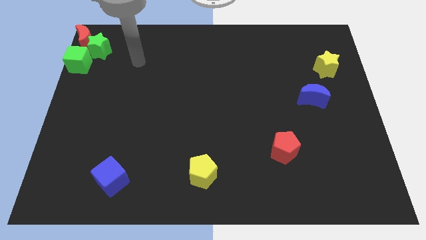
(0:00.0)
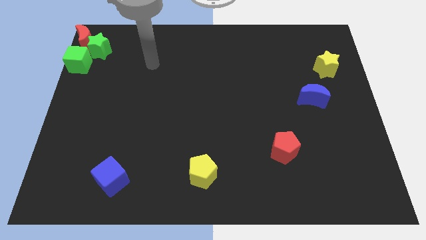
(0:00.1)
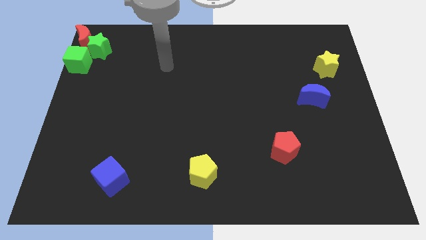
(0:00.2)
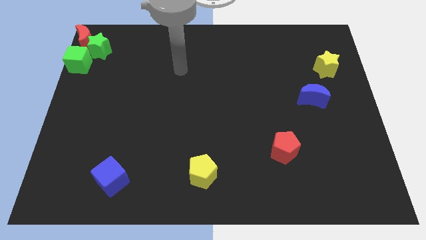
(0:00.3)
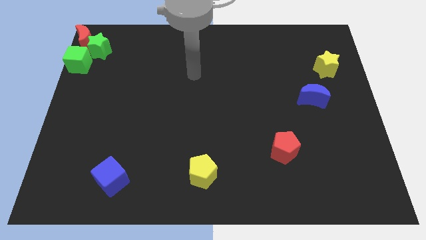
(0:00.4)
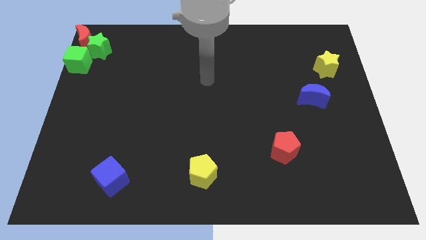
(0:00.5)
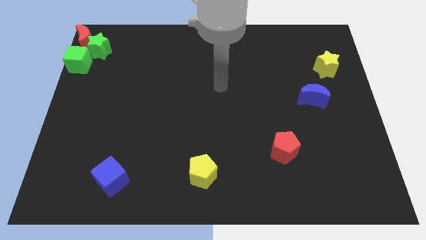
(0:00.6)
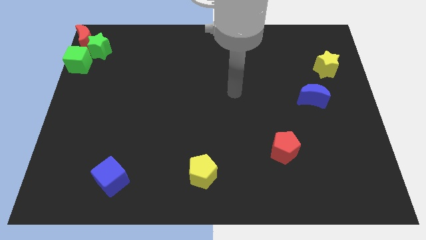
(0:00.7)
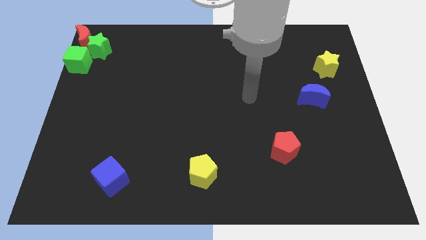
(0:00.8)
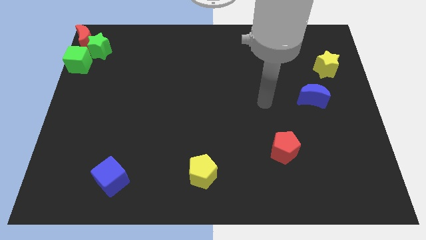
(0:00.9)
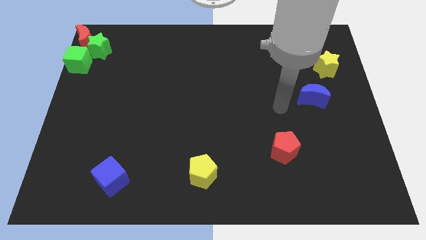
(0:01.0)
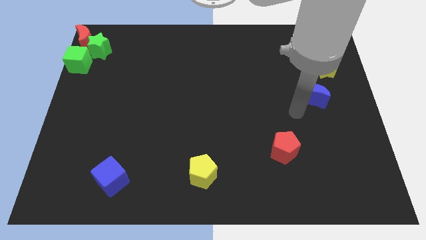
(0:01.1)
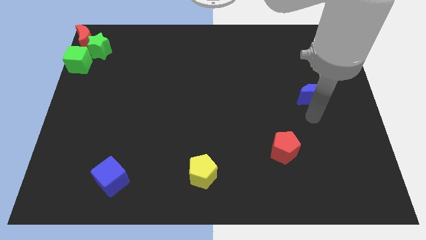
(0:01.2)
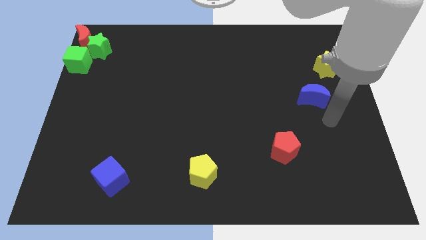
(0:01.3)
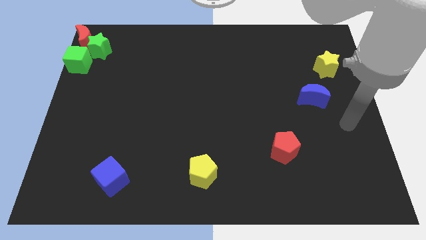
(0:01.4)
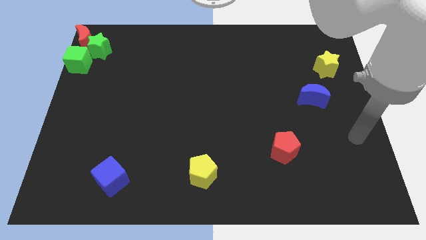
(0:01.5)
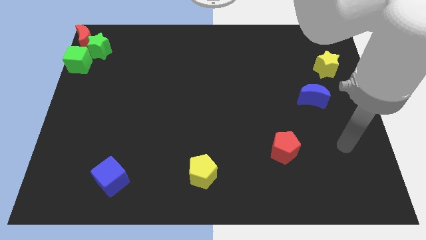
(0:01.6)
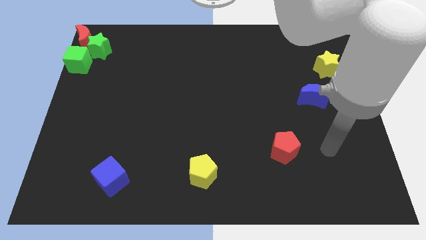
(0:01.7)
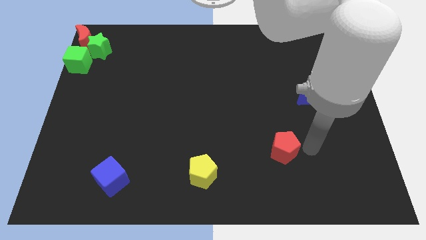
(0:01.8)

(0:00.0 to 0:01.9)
move the arm to the right side of the red pentagon

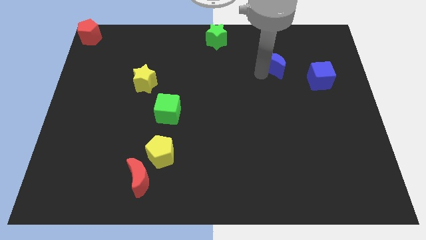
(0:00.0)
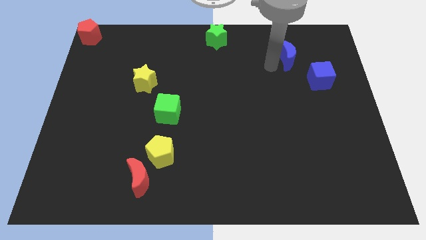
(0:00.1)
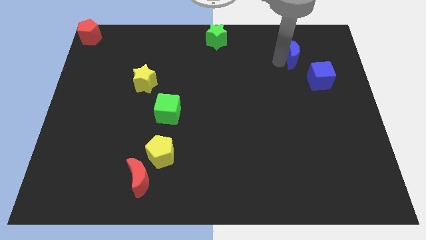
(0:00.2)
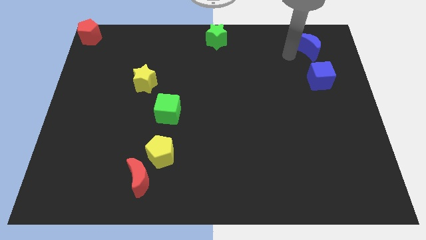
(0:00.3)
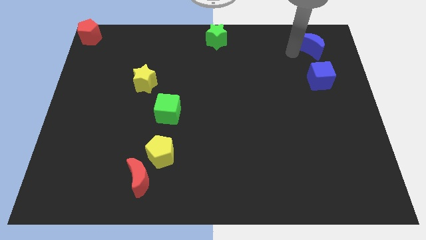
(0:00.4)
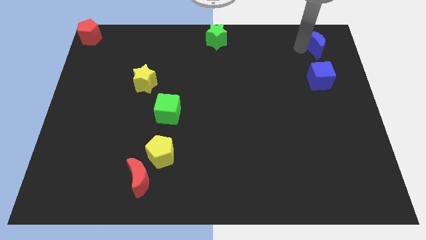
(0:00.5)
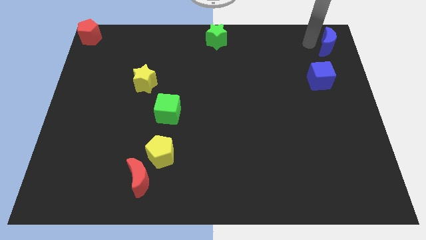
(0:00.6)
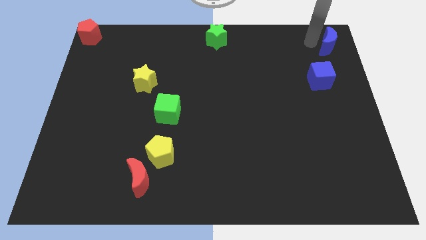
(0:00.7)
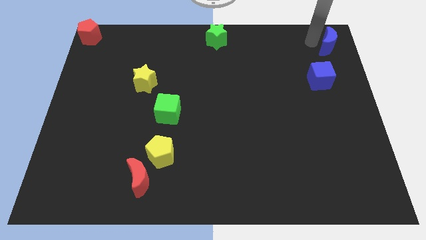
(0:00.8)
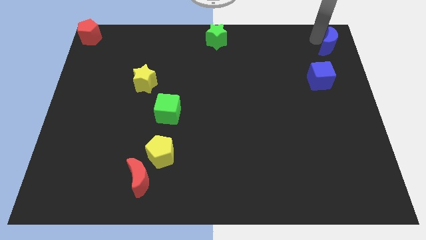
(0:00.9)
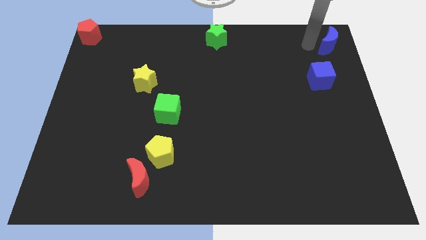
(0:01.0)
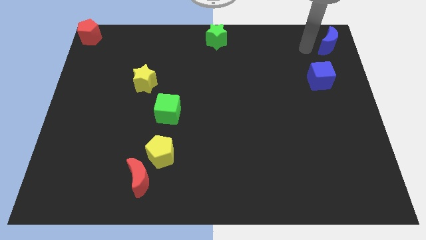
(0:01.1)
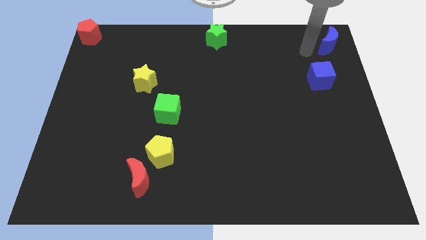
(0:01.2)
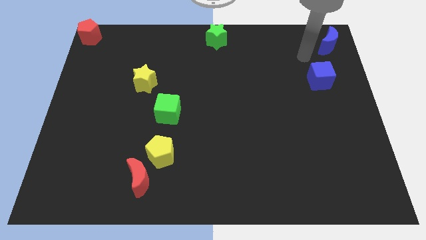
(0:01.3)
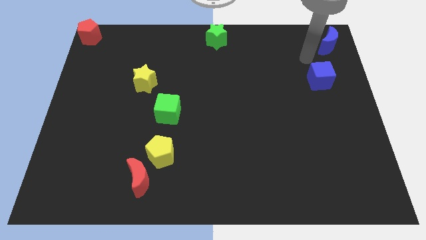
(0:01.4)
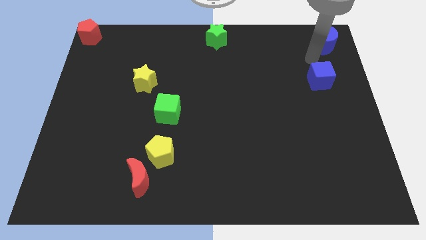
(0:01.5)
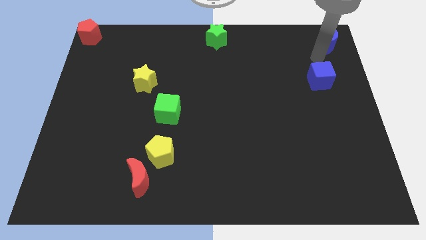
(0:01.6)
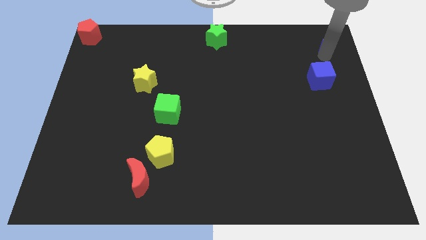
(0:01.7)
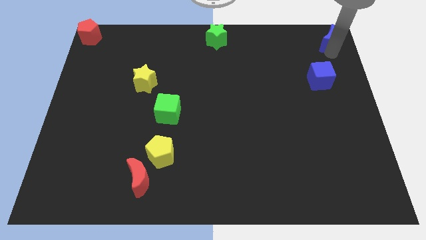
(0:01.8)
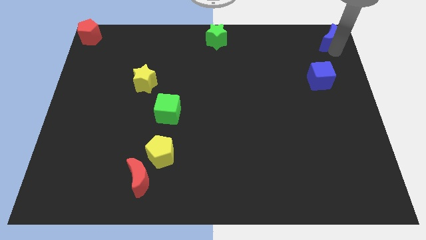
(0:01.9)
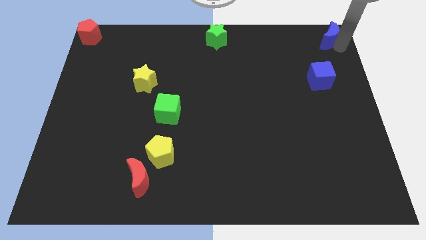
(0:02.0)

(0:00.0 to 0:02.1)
push the blue moon towards the top right side of the blue cube

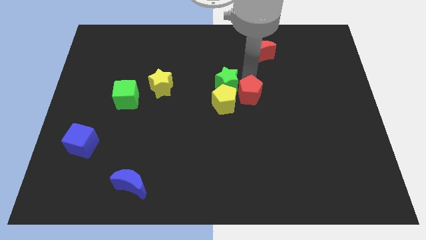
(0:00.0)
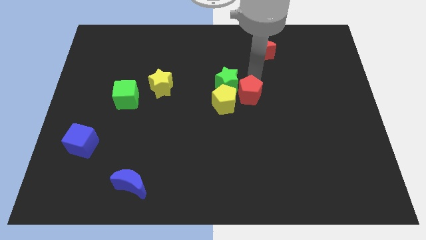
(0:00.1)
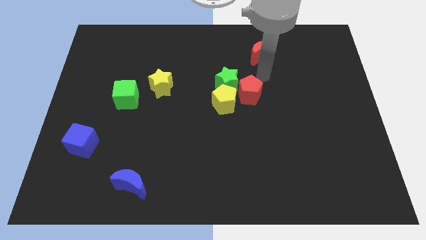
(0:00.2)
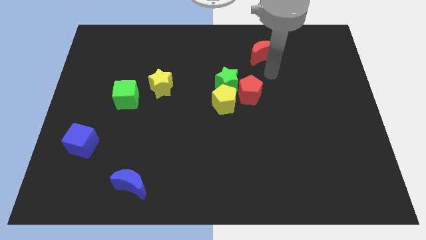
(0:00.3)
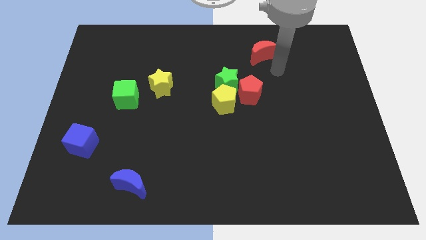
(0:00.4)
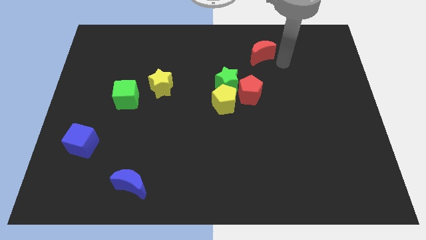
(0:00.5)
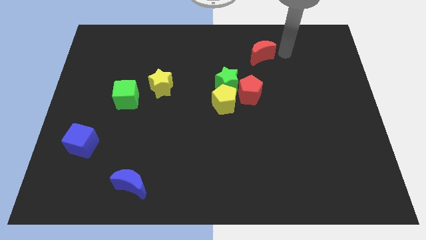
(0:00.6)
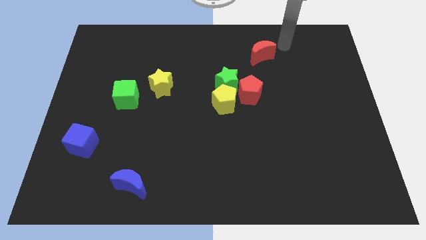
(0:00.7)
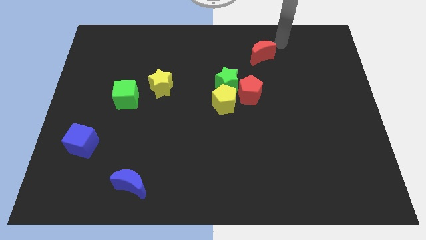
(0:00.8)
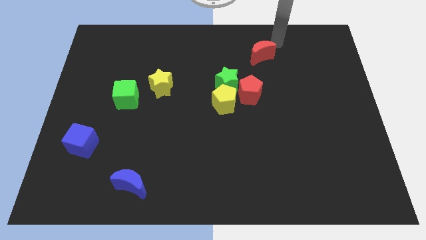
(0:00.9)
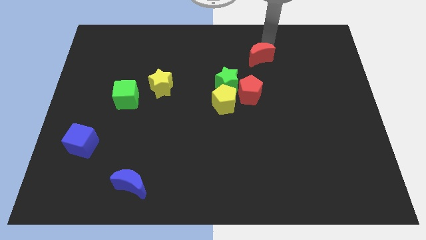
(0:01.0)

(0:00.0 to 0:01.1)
move your arm to the top side of the red crescent

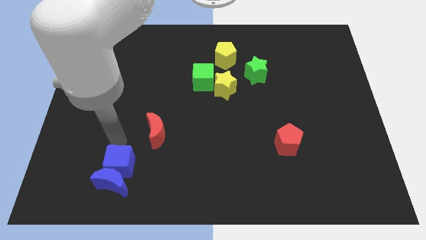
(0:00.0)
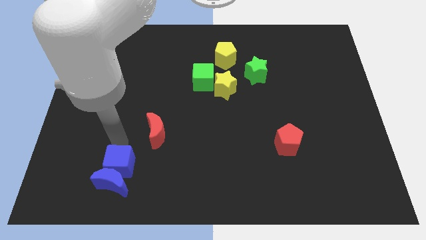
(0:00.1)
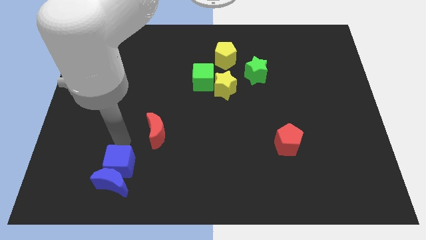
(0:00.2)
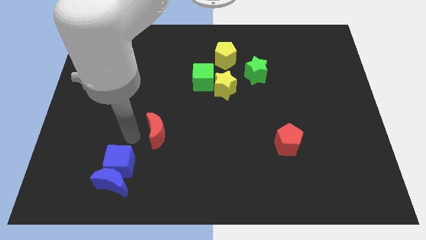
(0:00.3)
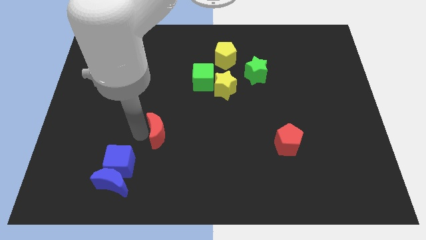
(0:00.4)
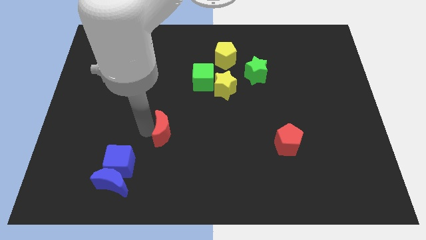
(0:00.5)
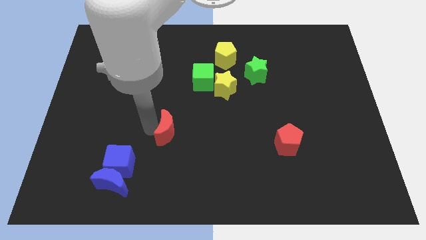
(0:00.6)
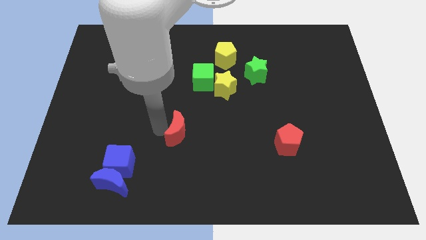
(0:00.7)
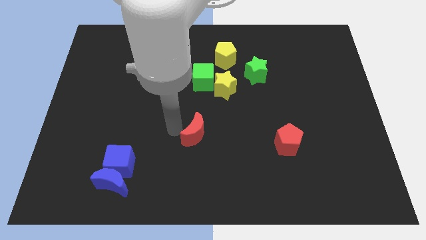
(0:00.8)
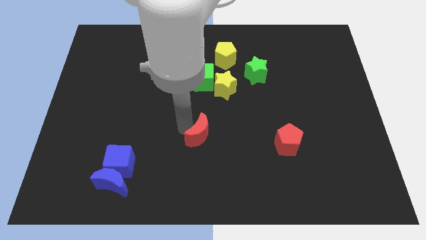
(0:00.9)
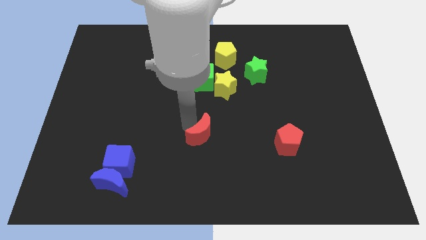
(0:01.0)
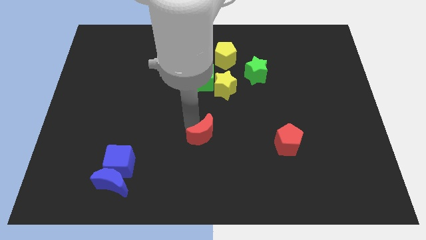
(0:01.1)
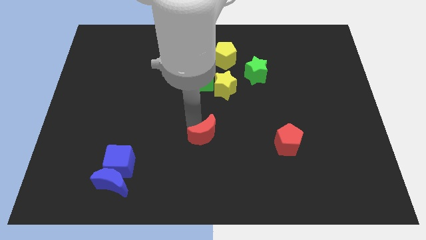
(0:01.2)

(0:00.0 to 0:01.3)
push the red crescent to right side of the board

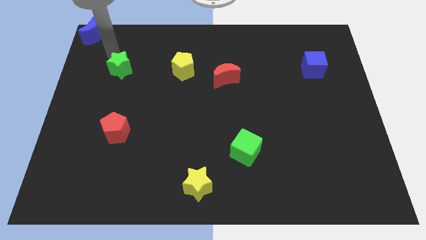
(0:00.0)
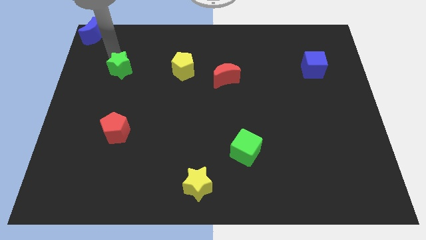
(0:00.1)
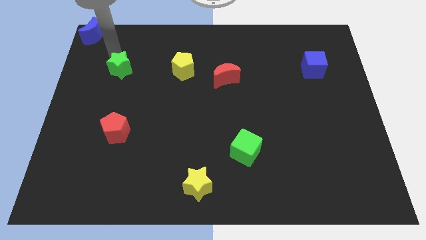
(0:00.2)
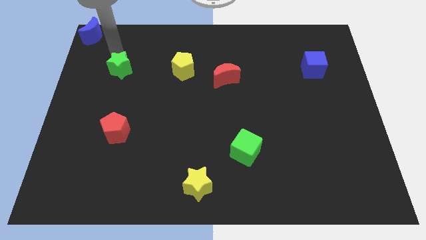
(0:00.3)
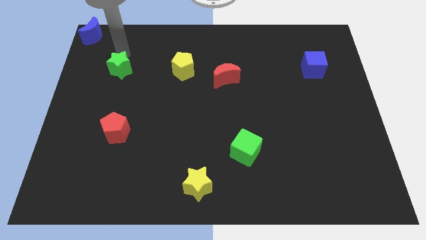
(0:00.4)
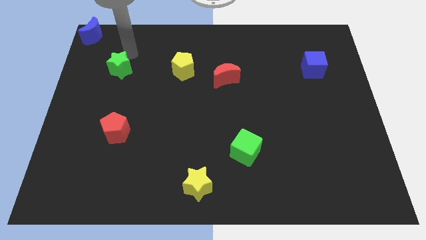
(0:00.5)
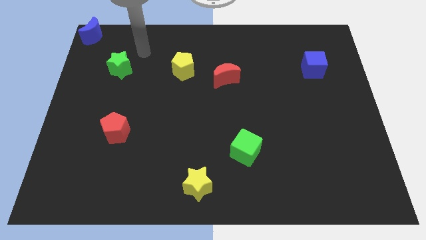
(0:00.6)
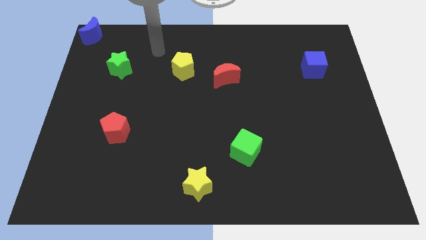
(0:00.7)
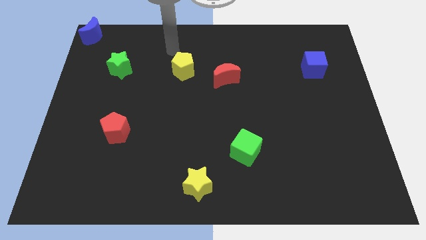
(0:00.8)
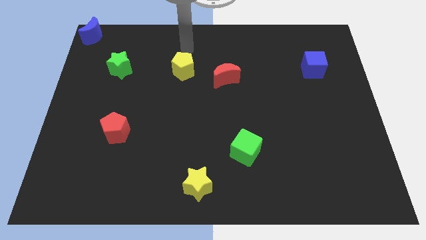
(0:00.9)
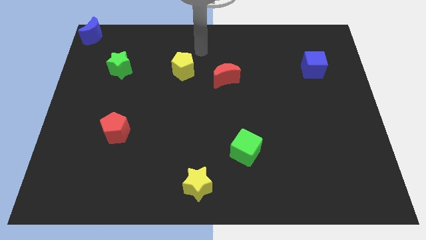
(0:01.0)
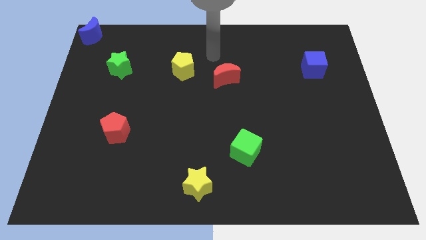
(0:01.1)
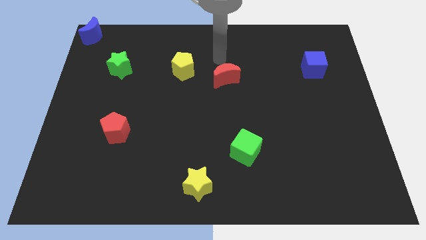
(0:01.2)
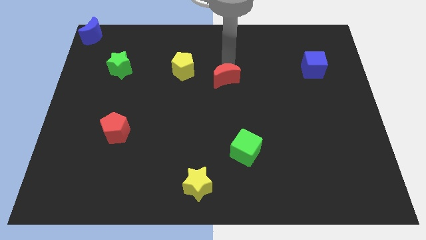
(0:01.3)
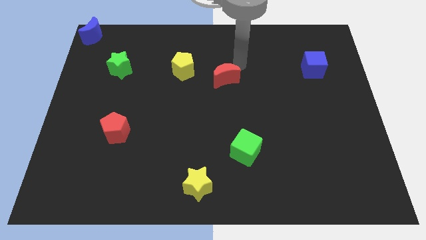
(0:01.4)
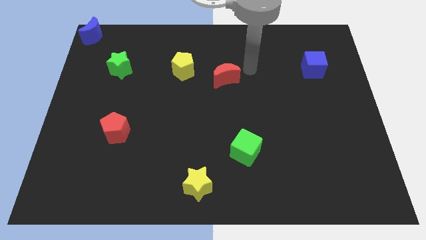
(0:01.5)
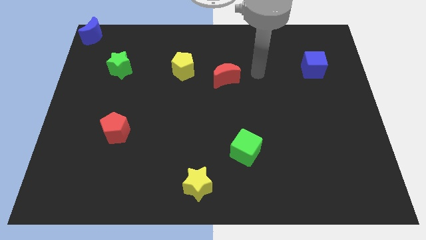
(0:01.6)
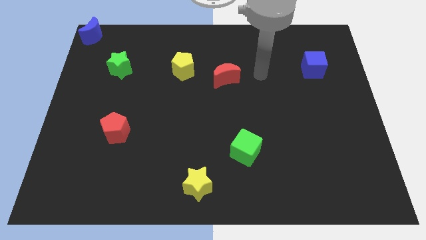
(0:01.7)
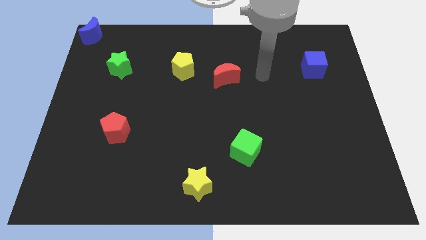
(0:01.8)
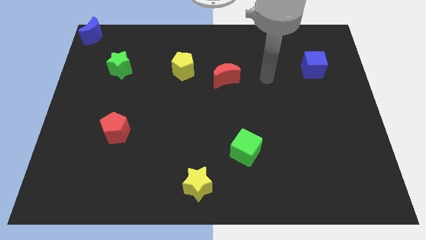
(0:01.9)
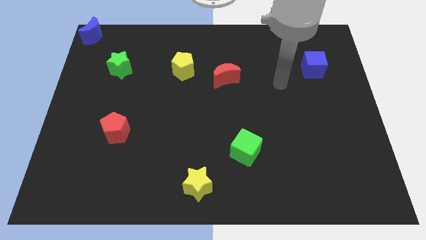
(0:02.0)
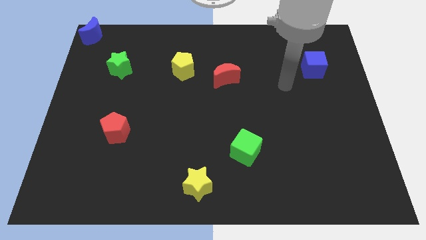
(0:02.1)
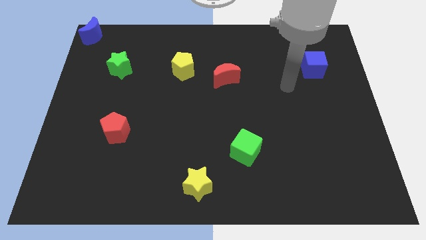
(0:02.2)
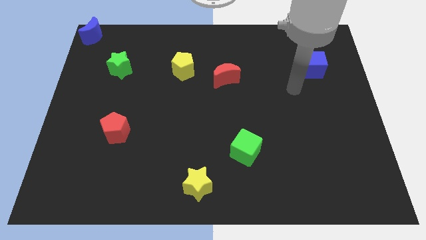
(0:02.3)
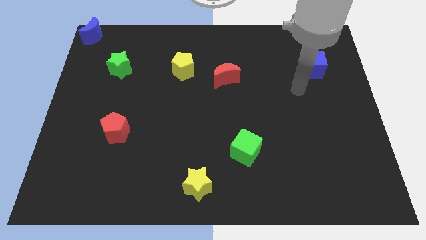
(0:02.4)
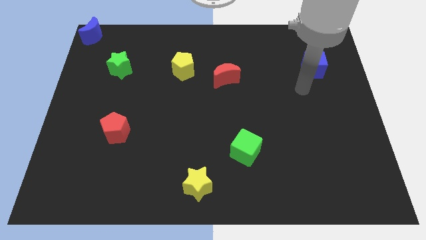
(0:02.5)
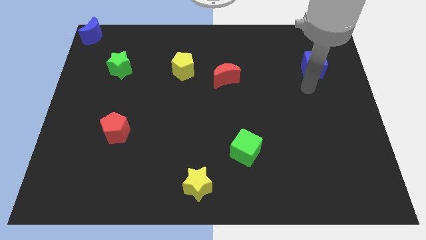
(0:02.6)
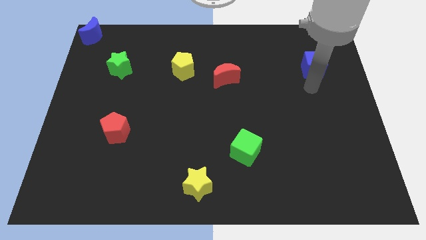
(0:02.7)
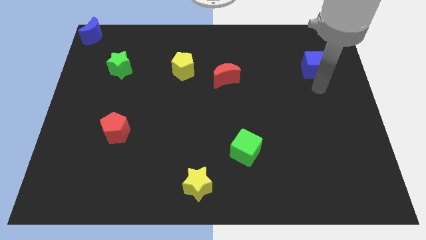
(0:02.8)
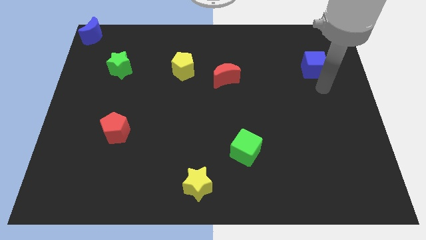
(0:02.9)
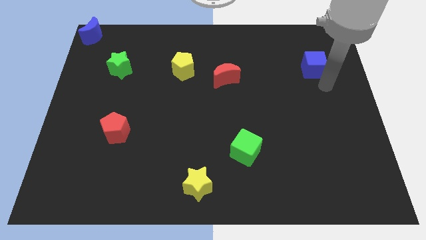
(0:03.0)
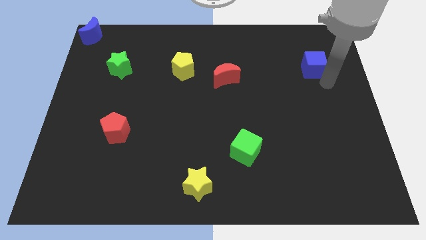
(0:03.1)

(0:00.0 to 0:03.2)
place the arm at the bottom side of the blue cube
